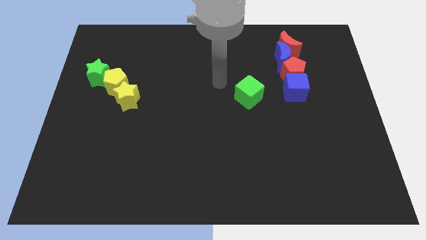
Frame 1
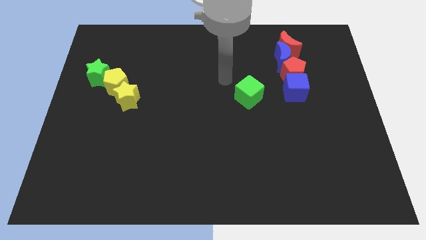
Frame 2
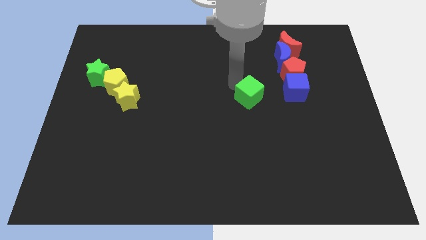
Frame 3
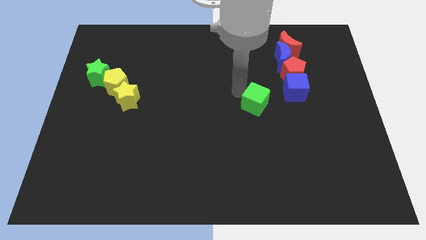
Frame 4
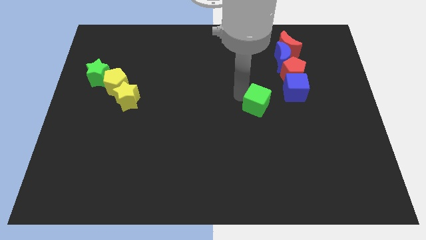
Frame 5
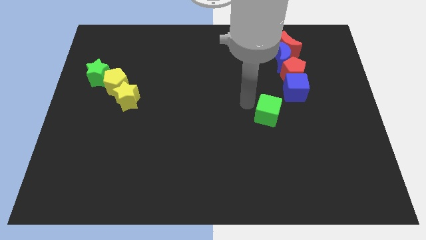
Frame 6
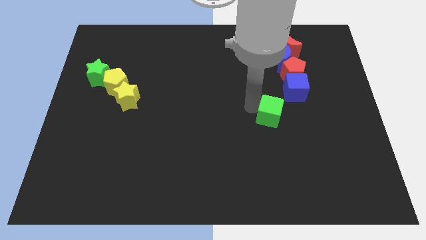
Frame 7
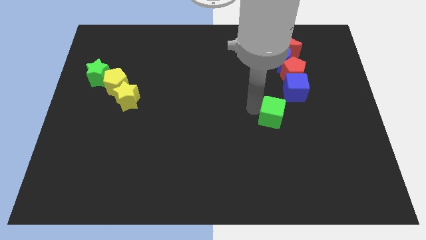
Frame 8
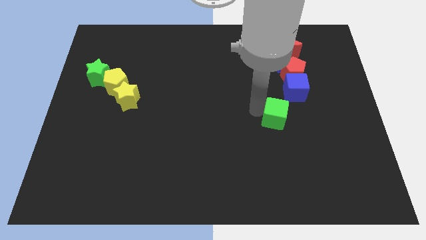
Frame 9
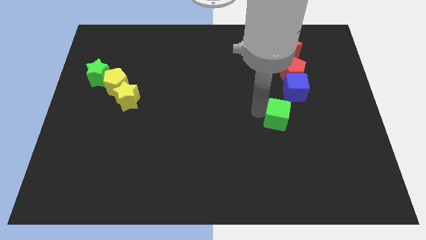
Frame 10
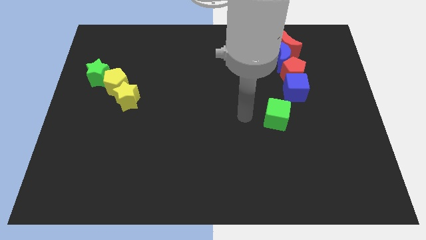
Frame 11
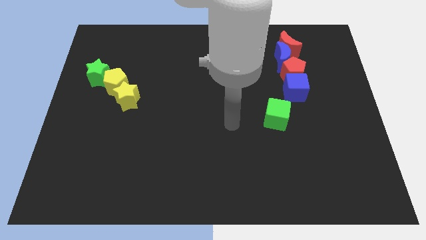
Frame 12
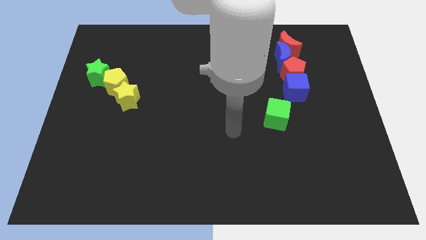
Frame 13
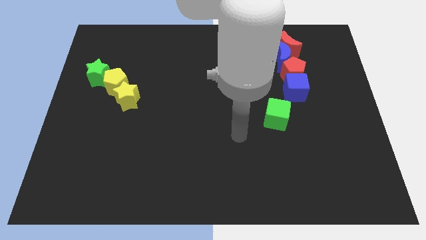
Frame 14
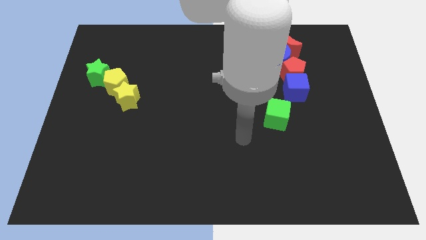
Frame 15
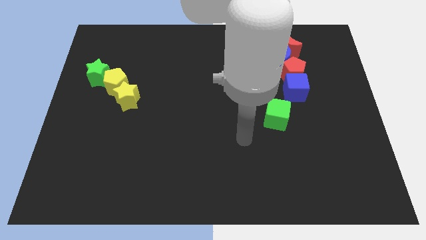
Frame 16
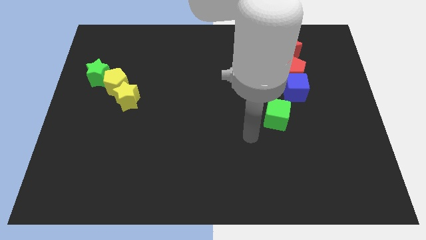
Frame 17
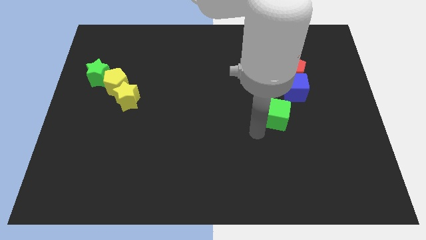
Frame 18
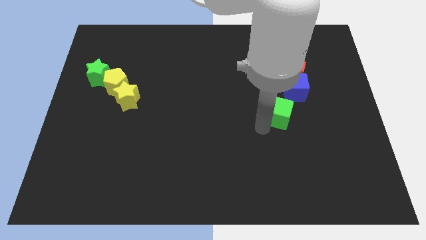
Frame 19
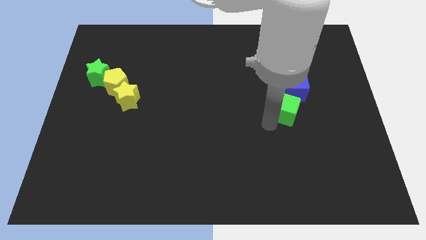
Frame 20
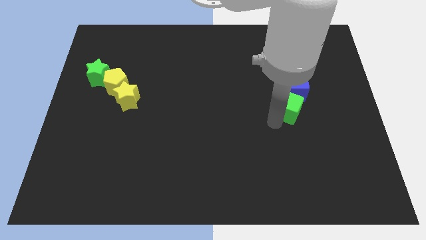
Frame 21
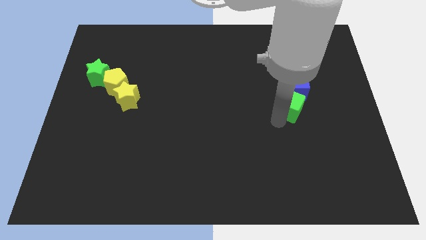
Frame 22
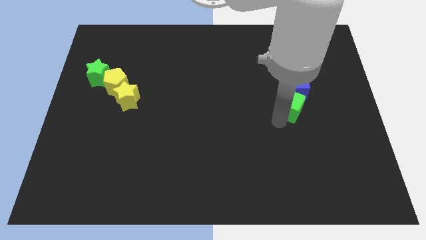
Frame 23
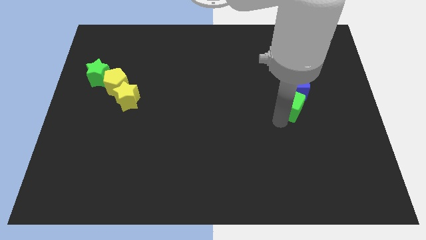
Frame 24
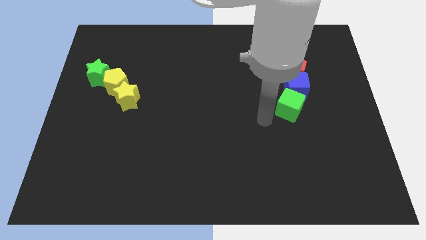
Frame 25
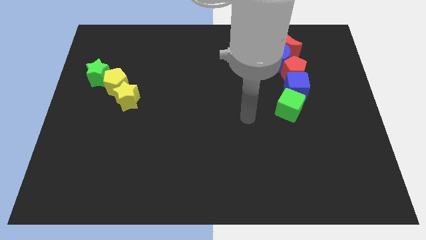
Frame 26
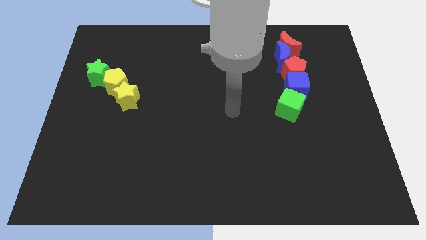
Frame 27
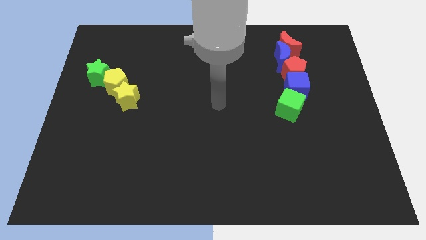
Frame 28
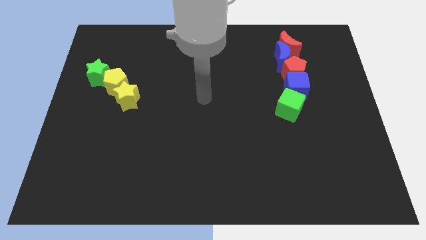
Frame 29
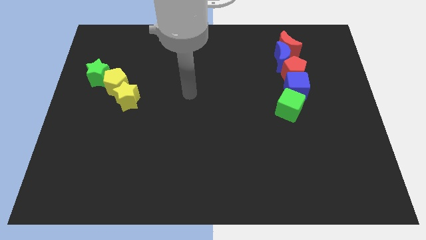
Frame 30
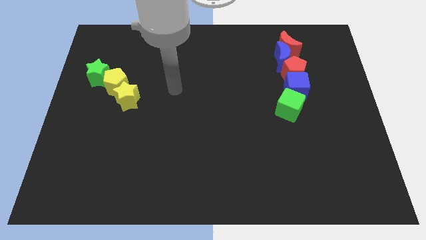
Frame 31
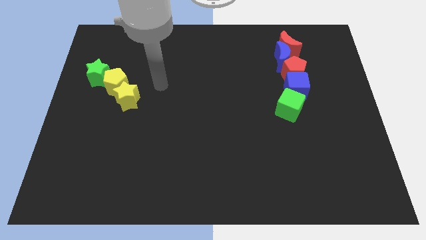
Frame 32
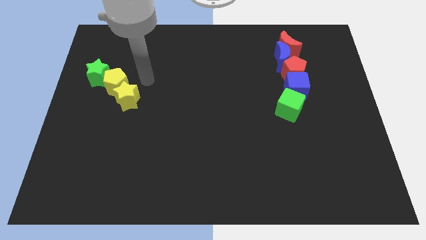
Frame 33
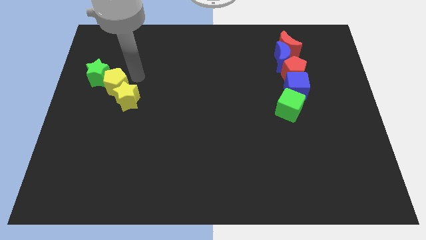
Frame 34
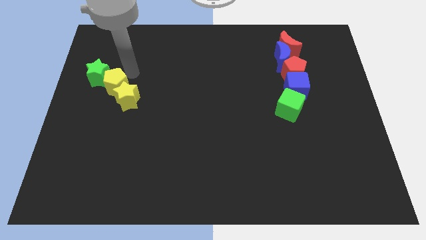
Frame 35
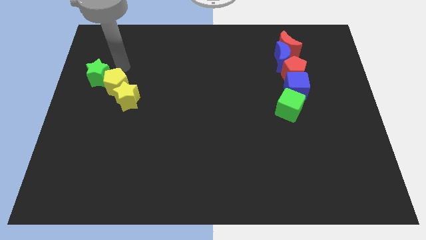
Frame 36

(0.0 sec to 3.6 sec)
move the green cube in a vertical line

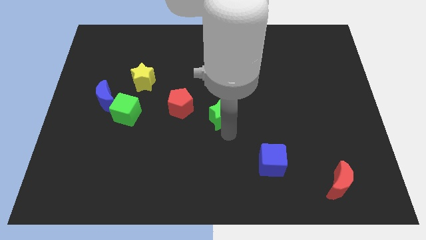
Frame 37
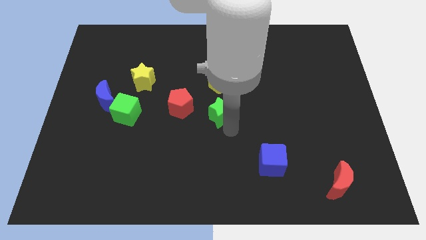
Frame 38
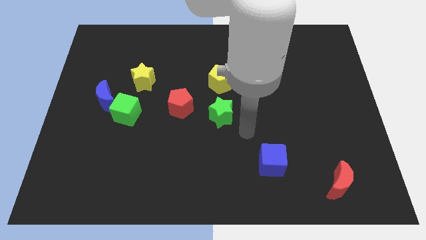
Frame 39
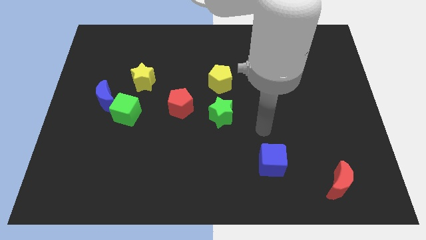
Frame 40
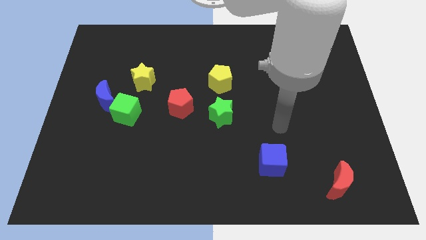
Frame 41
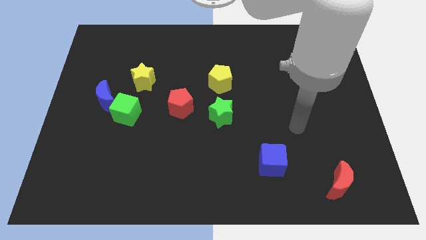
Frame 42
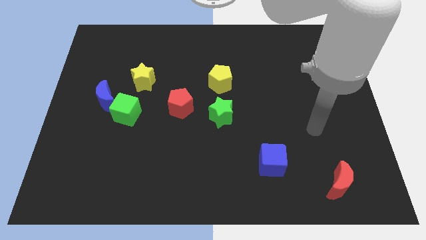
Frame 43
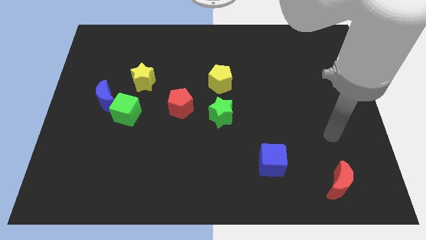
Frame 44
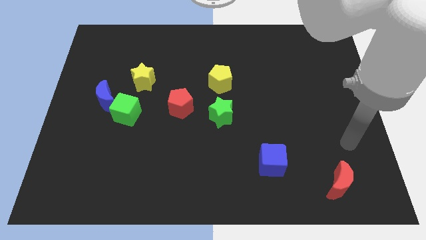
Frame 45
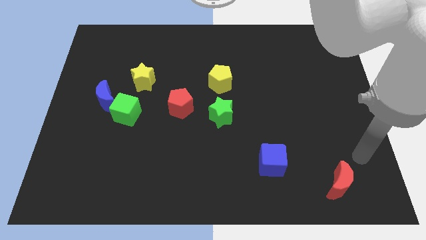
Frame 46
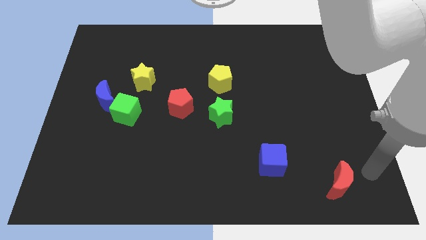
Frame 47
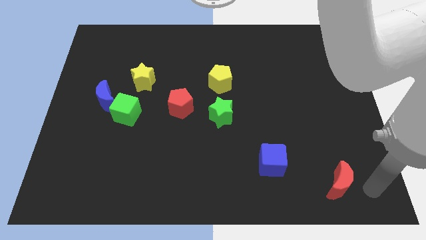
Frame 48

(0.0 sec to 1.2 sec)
move your arm to the right of red moon

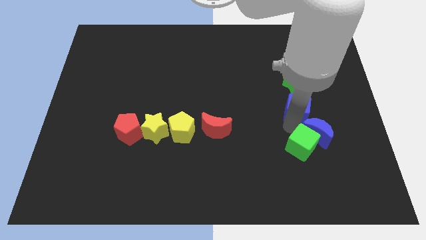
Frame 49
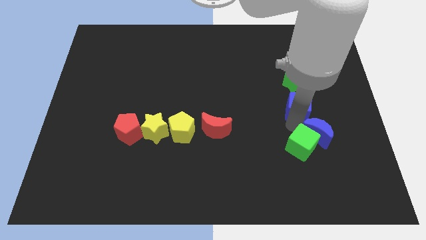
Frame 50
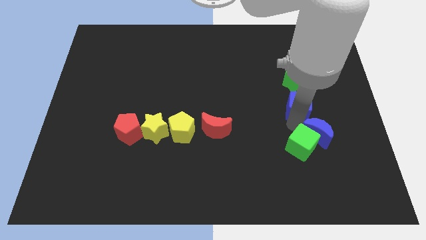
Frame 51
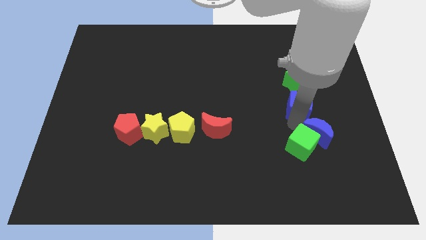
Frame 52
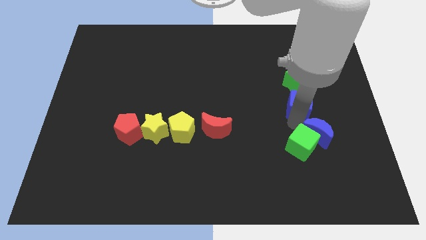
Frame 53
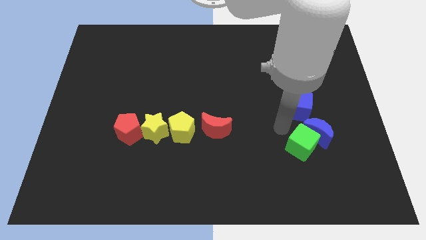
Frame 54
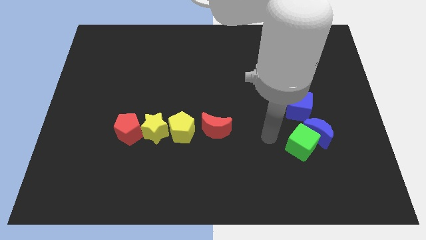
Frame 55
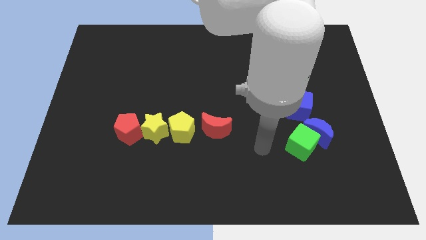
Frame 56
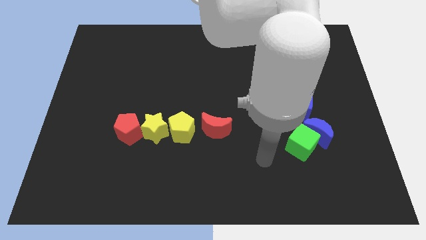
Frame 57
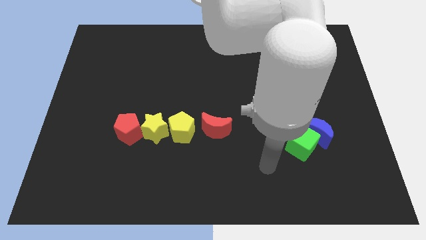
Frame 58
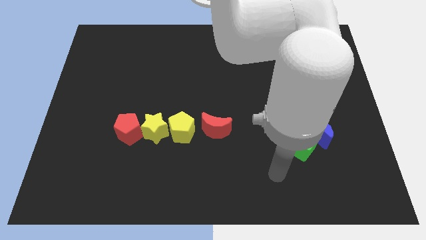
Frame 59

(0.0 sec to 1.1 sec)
slide your arm to the bottom left of green cube

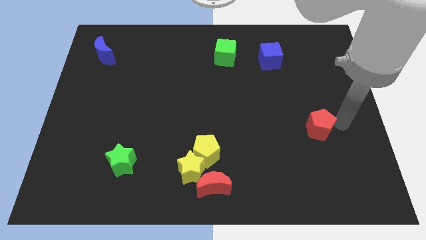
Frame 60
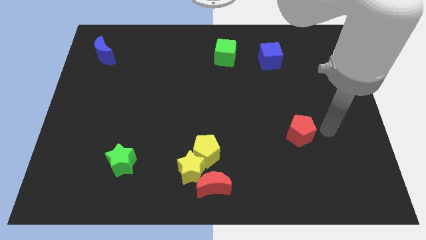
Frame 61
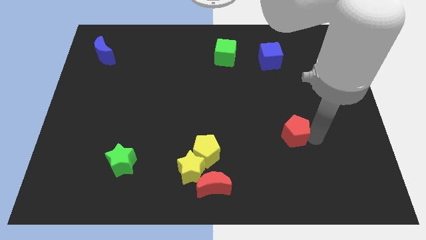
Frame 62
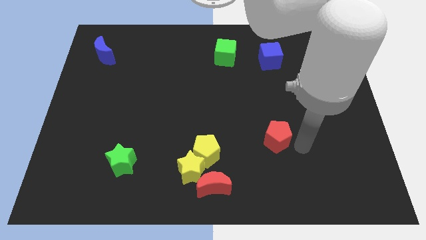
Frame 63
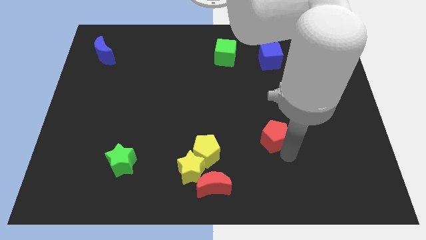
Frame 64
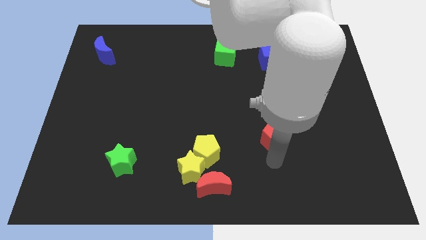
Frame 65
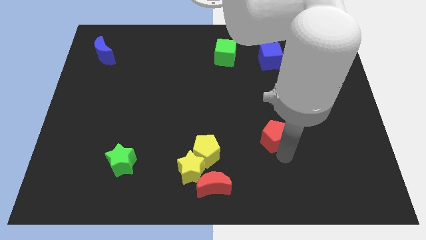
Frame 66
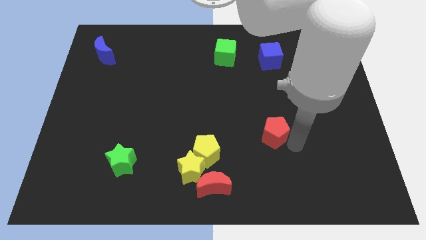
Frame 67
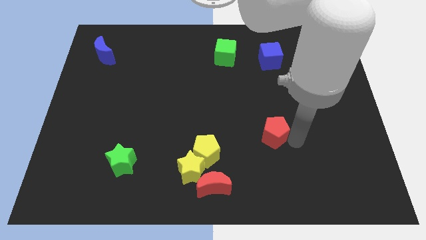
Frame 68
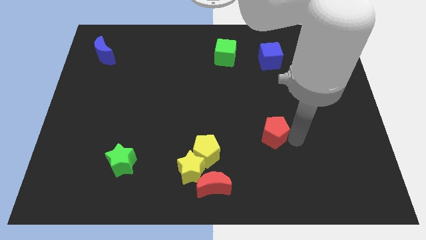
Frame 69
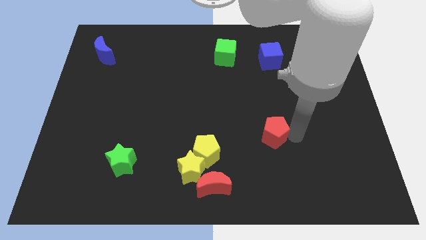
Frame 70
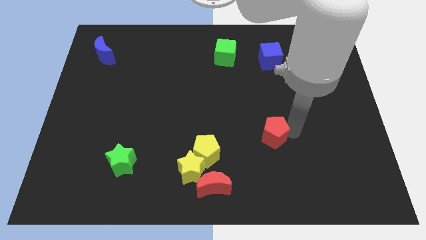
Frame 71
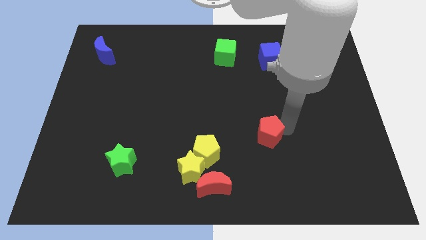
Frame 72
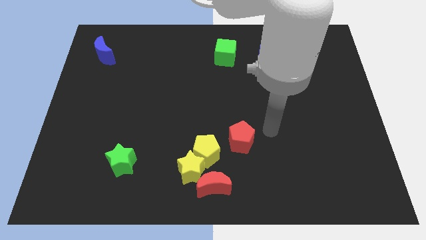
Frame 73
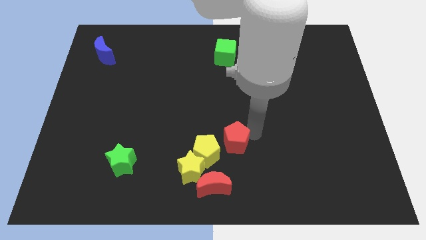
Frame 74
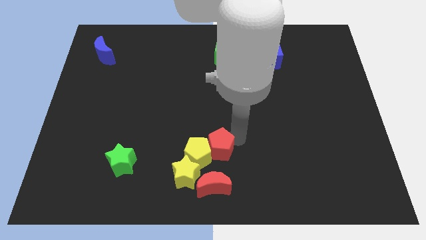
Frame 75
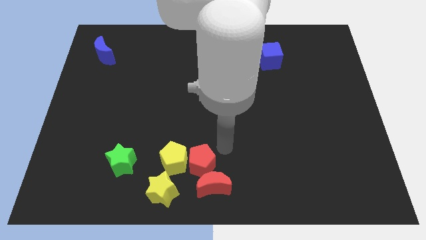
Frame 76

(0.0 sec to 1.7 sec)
push the red pentagon into yellow pentagon

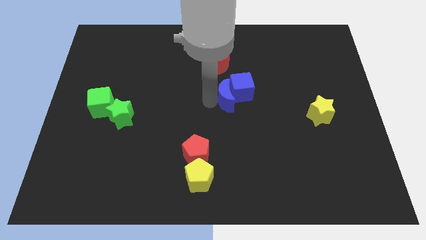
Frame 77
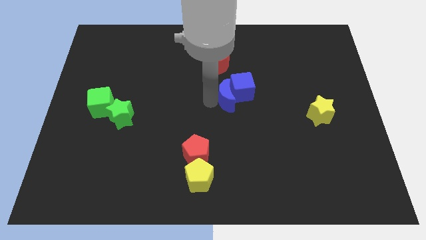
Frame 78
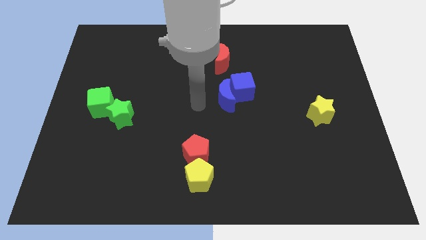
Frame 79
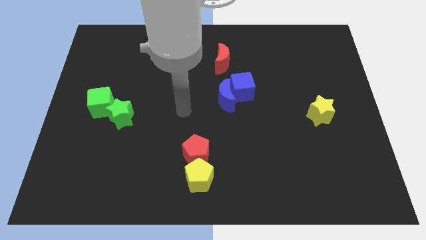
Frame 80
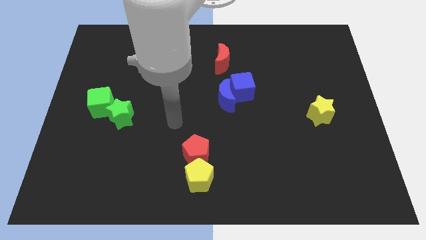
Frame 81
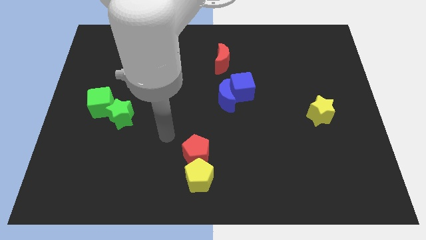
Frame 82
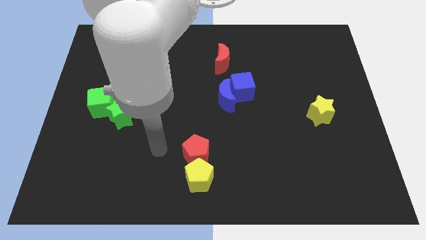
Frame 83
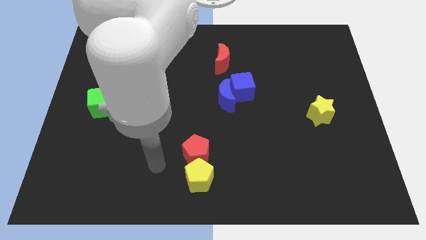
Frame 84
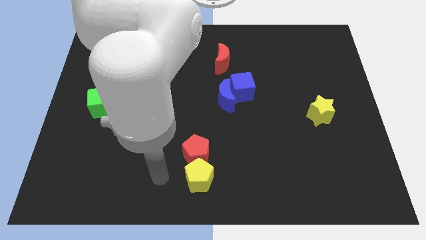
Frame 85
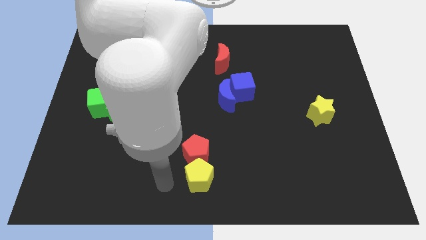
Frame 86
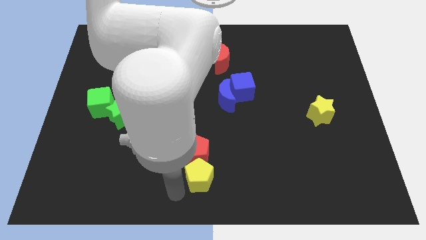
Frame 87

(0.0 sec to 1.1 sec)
move your arm away from blue moon

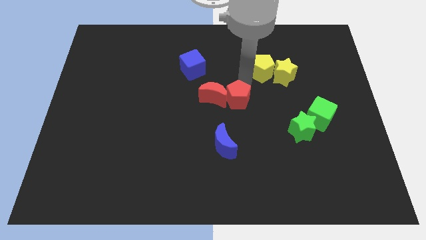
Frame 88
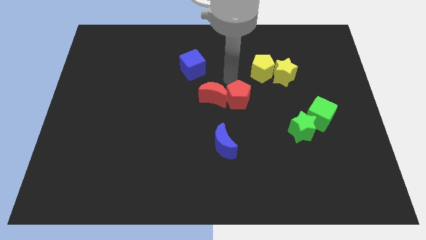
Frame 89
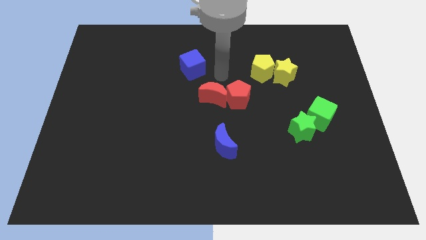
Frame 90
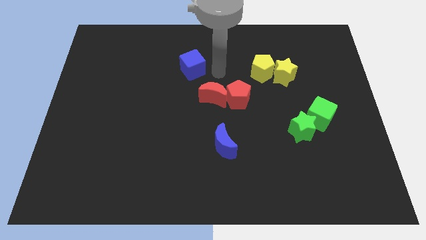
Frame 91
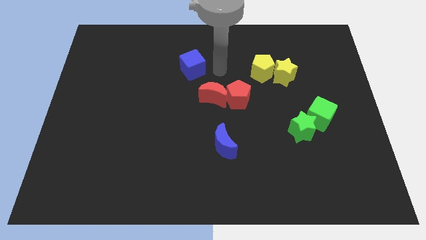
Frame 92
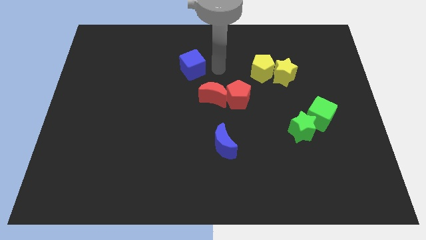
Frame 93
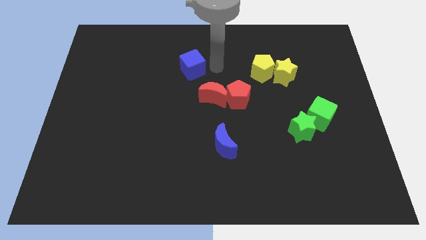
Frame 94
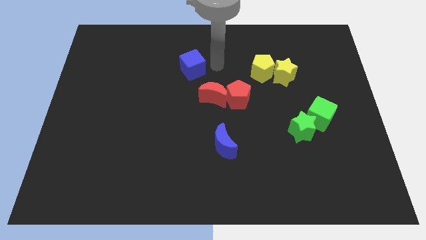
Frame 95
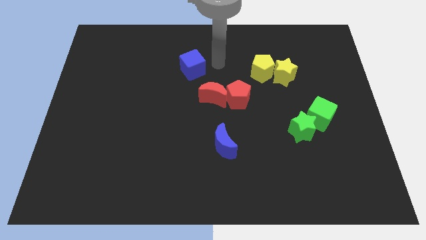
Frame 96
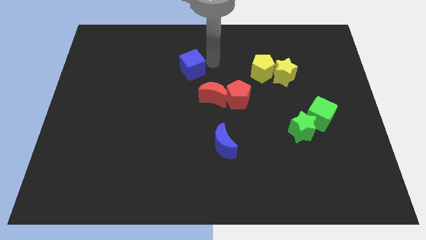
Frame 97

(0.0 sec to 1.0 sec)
point your arm to the right side of blue cube
